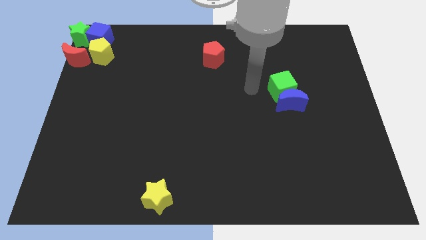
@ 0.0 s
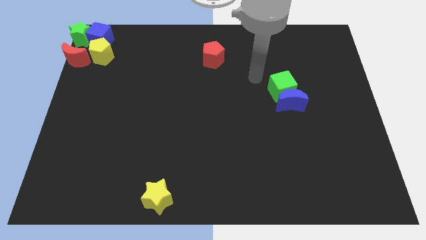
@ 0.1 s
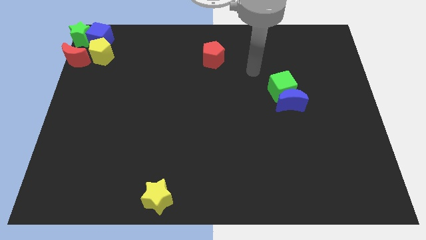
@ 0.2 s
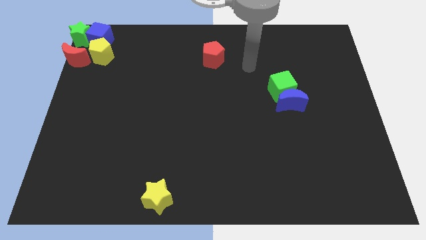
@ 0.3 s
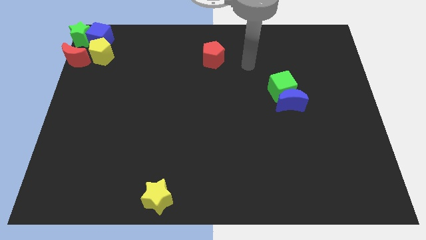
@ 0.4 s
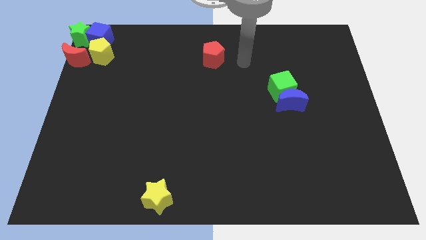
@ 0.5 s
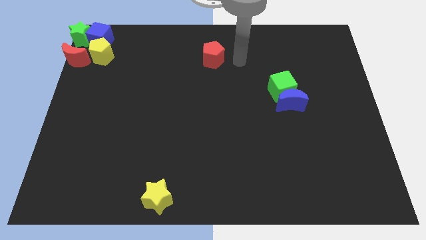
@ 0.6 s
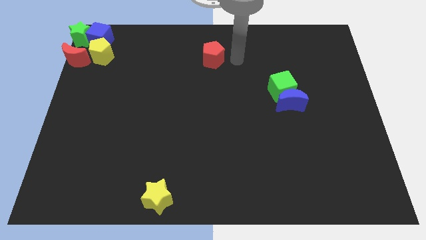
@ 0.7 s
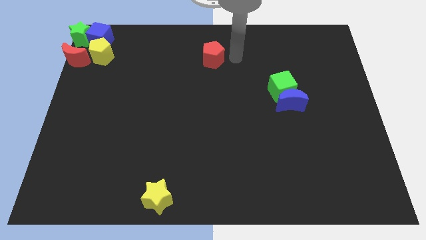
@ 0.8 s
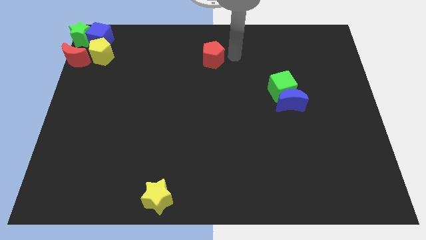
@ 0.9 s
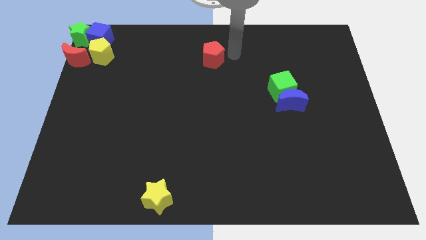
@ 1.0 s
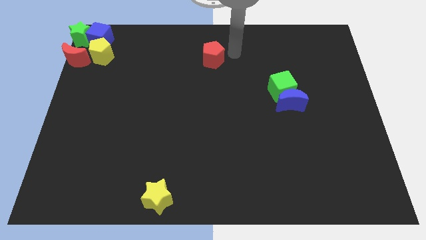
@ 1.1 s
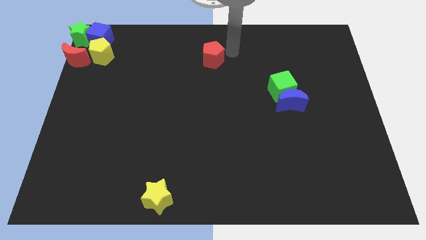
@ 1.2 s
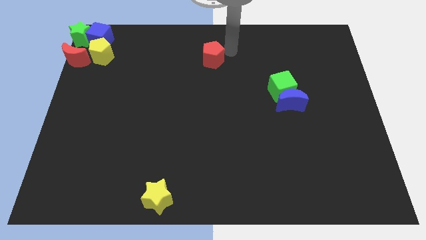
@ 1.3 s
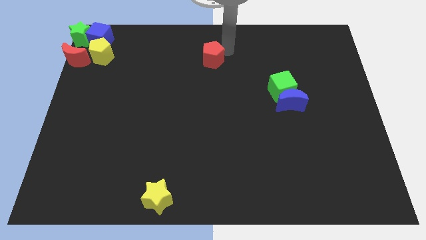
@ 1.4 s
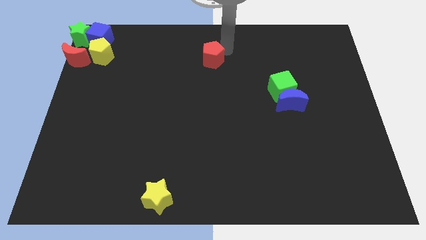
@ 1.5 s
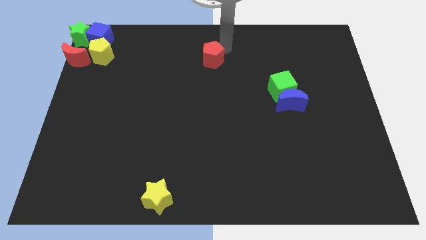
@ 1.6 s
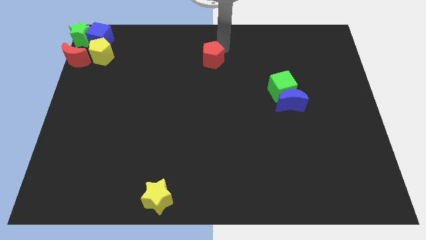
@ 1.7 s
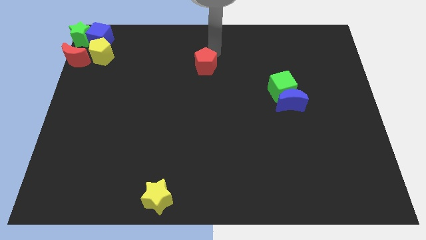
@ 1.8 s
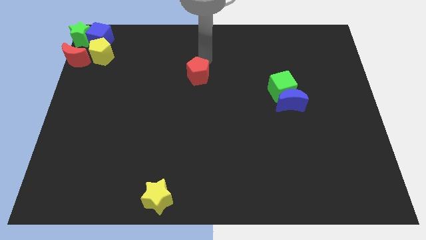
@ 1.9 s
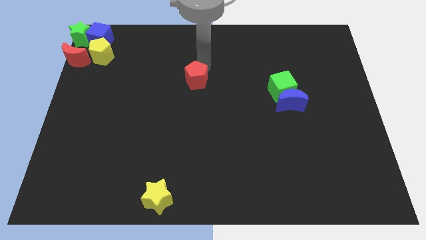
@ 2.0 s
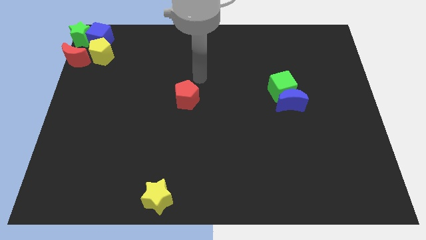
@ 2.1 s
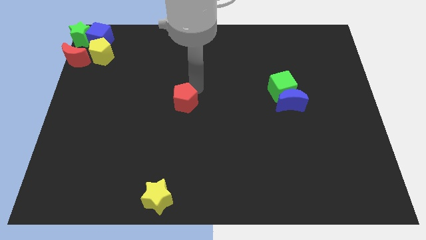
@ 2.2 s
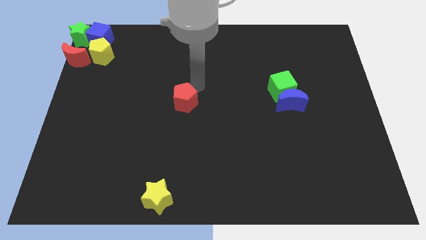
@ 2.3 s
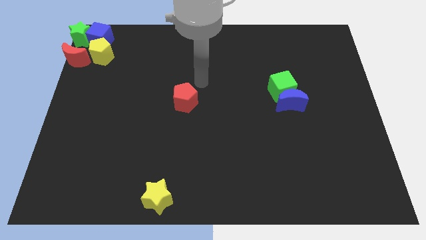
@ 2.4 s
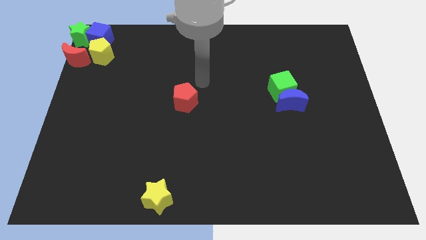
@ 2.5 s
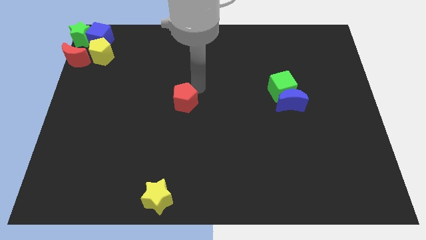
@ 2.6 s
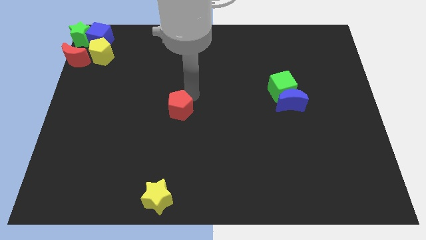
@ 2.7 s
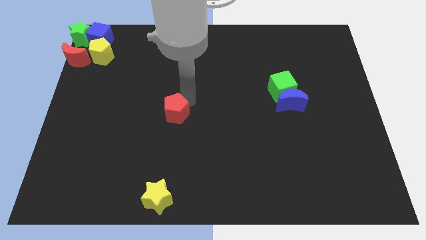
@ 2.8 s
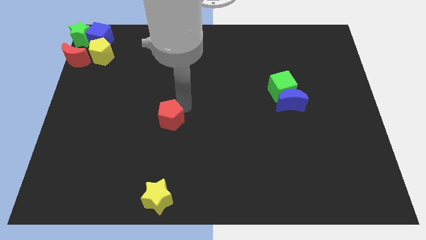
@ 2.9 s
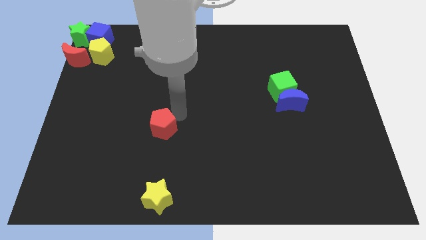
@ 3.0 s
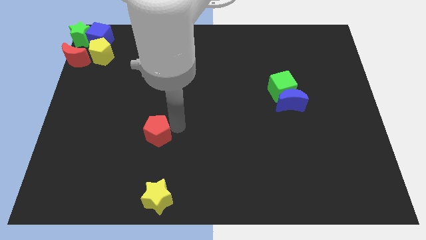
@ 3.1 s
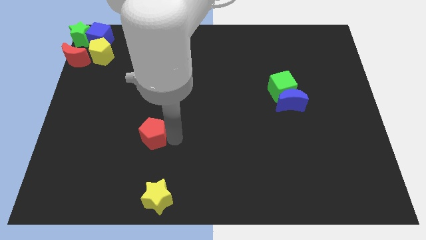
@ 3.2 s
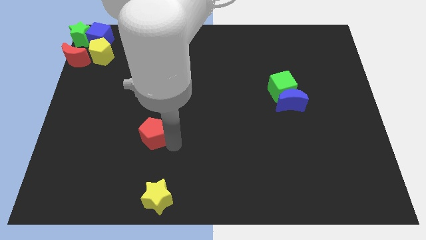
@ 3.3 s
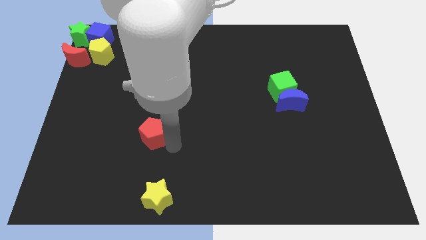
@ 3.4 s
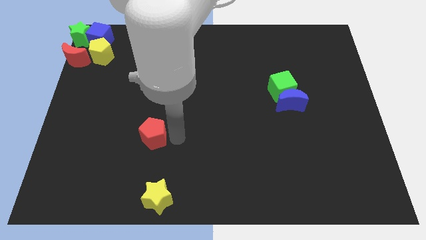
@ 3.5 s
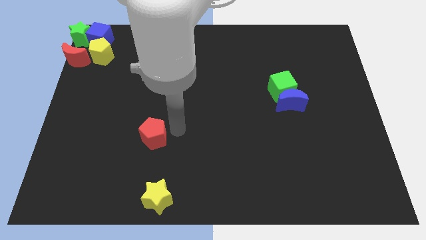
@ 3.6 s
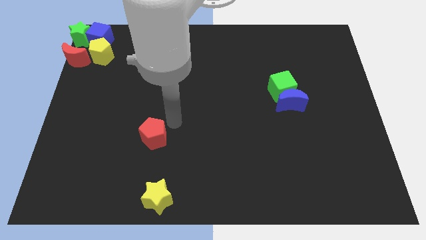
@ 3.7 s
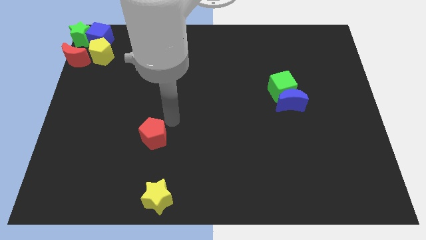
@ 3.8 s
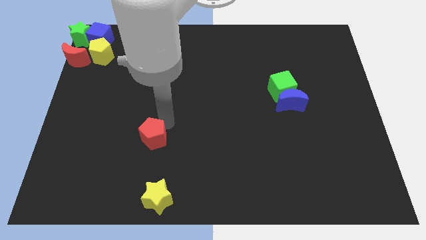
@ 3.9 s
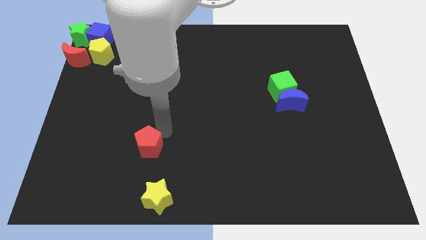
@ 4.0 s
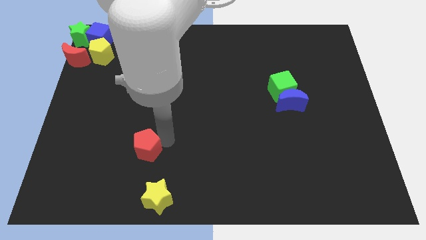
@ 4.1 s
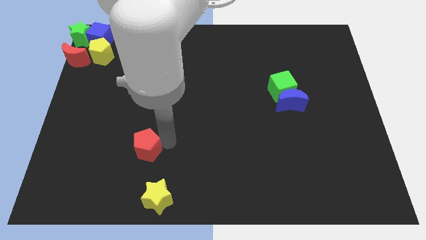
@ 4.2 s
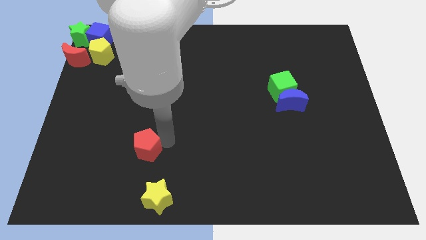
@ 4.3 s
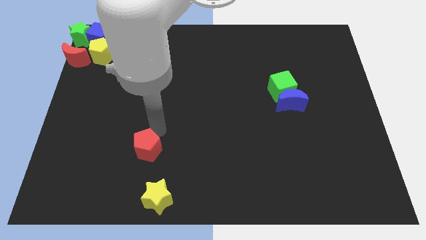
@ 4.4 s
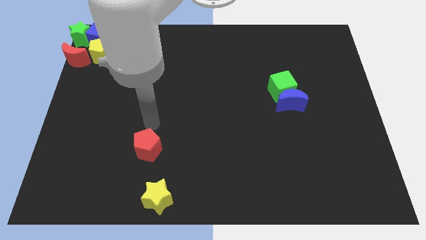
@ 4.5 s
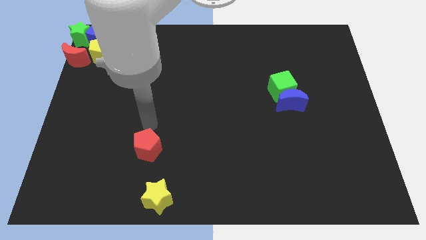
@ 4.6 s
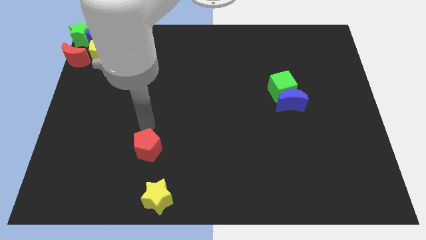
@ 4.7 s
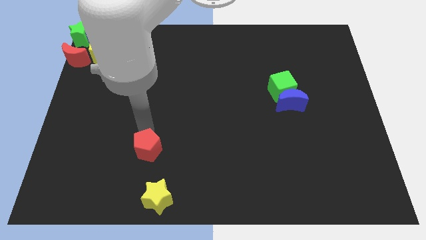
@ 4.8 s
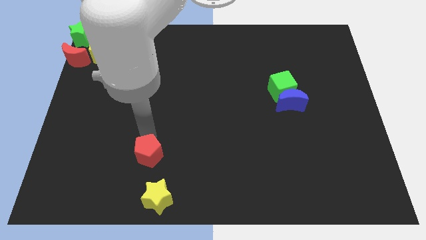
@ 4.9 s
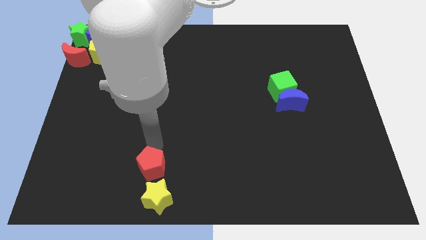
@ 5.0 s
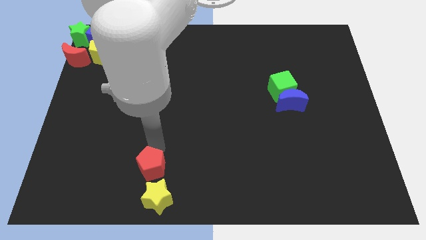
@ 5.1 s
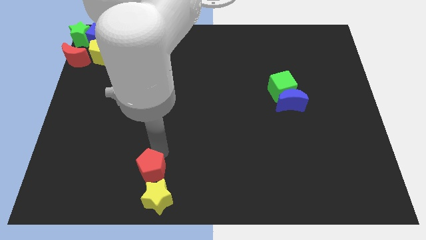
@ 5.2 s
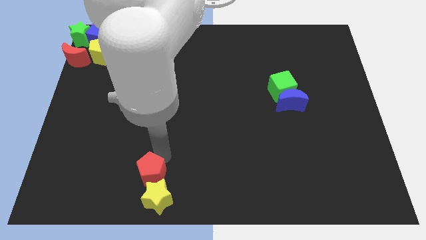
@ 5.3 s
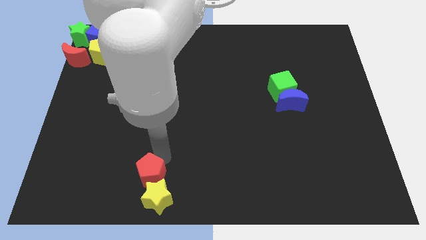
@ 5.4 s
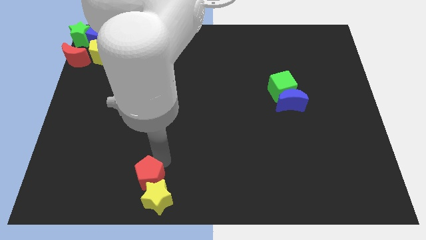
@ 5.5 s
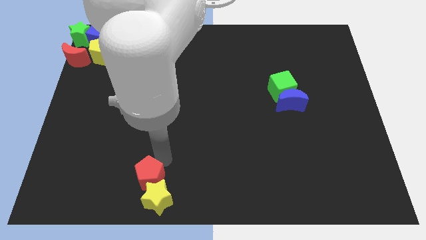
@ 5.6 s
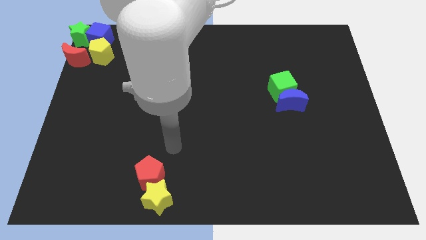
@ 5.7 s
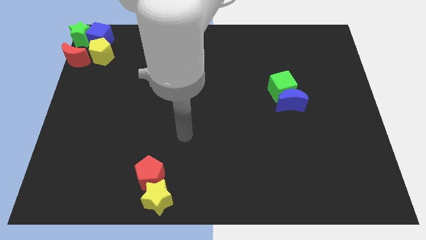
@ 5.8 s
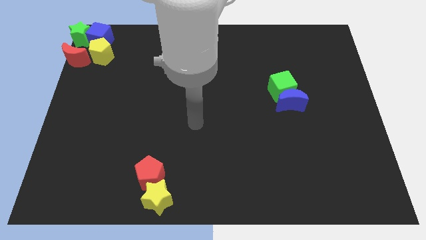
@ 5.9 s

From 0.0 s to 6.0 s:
move the red pentagon into the top of yellow star

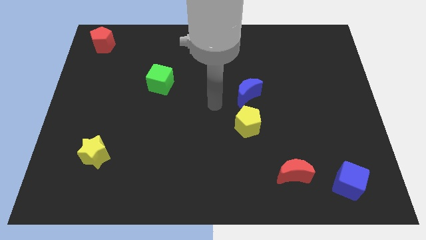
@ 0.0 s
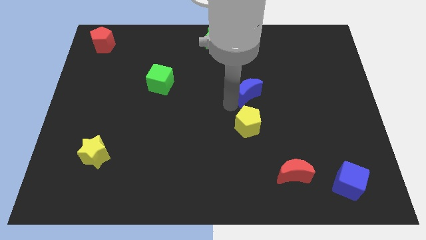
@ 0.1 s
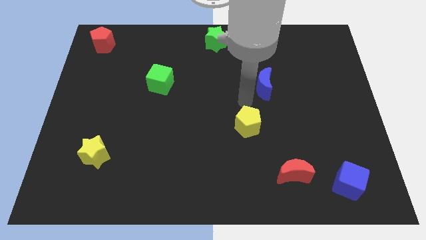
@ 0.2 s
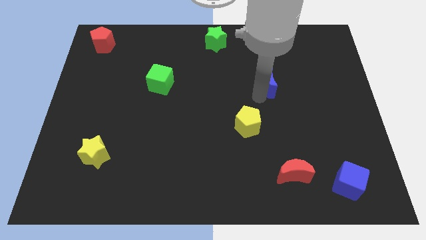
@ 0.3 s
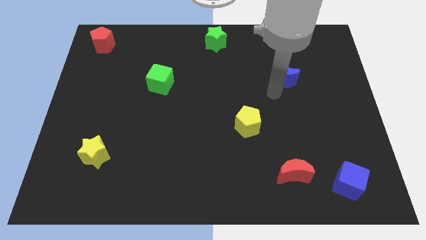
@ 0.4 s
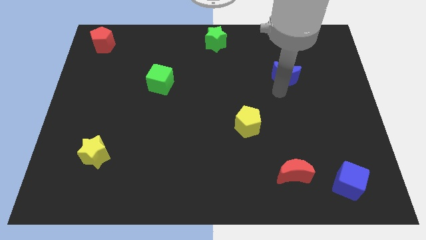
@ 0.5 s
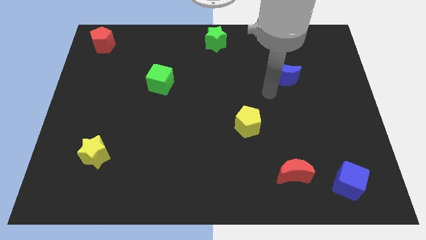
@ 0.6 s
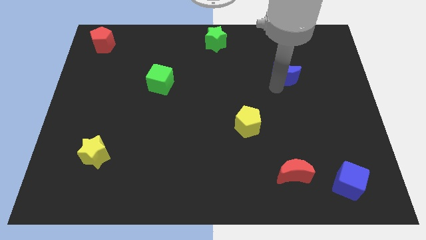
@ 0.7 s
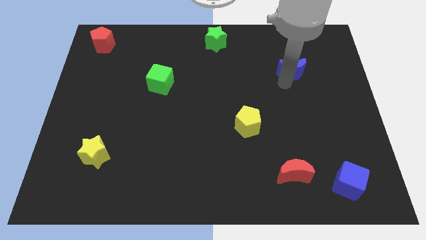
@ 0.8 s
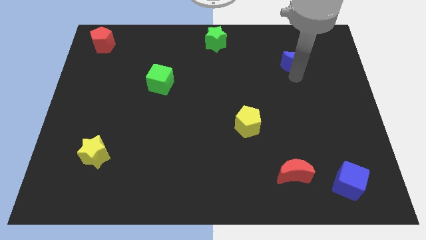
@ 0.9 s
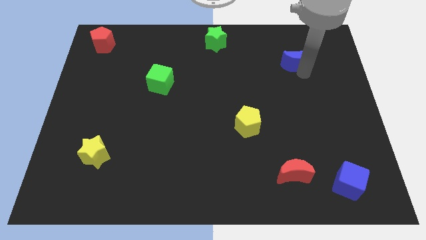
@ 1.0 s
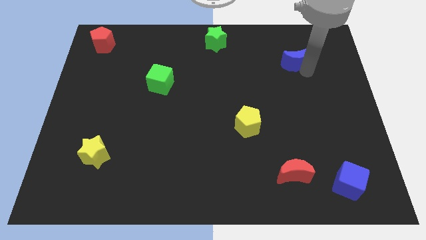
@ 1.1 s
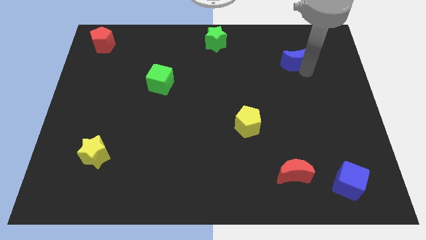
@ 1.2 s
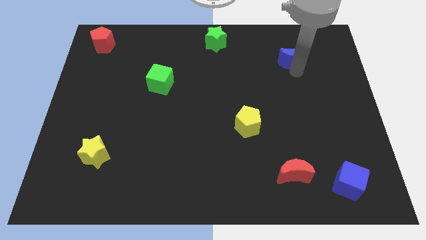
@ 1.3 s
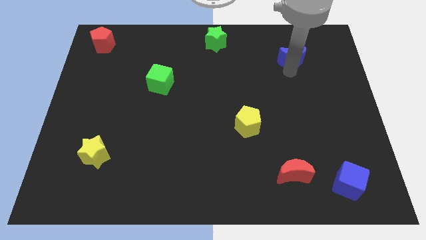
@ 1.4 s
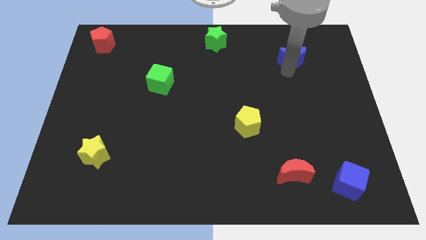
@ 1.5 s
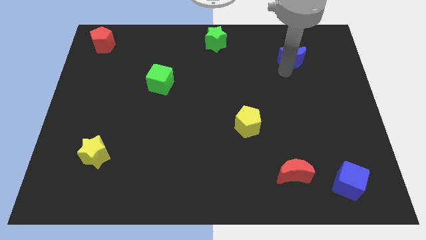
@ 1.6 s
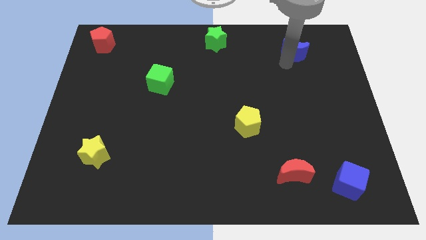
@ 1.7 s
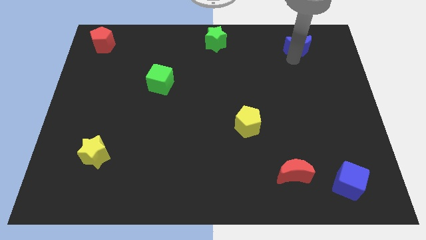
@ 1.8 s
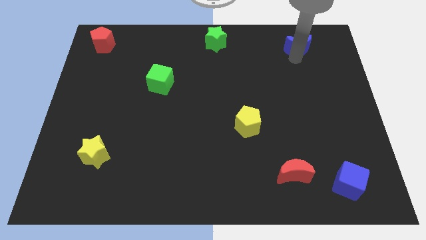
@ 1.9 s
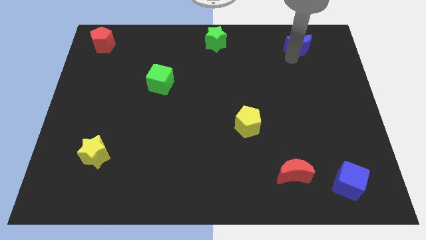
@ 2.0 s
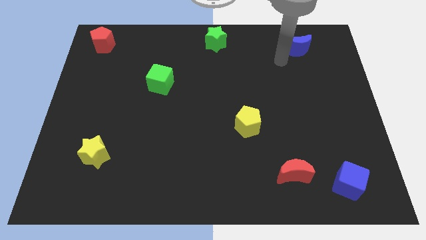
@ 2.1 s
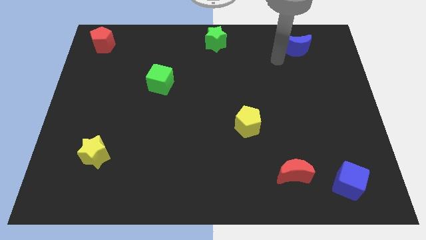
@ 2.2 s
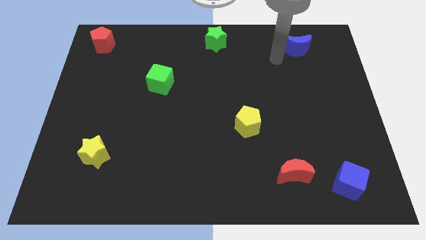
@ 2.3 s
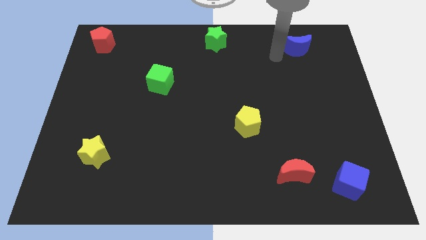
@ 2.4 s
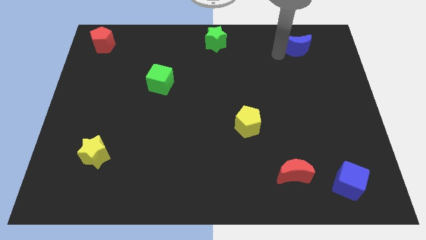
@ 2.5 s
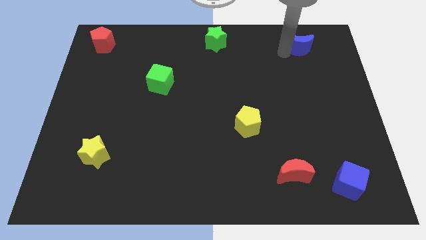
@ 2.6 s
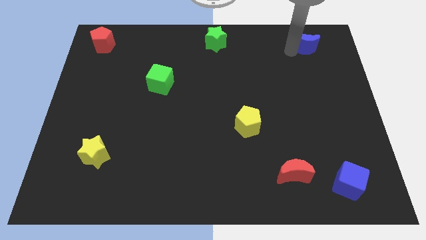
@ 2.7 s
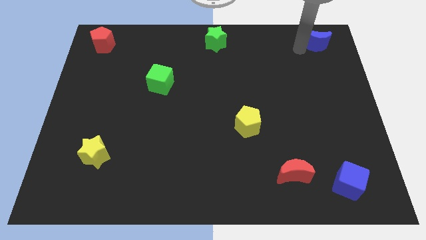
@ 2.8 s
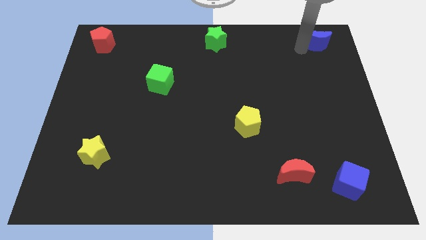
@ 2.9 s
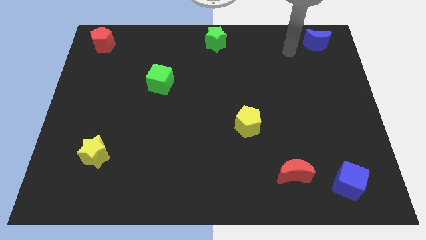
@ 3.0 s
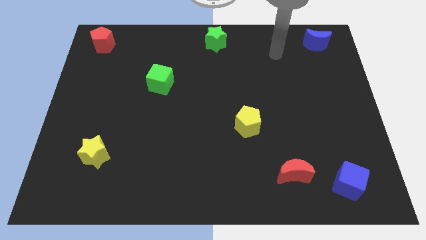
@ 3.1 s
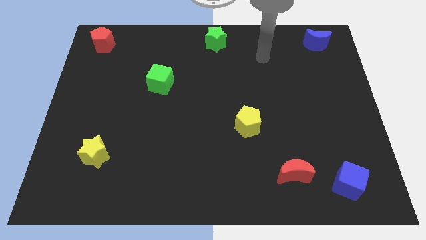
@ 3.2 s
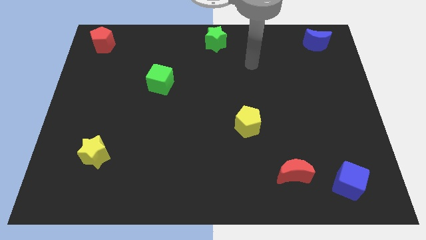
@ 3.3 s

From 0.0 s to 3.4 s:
push blue moon towards top right side of the board
